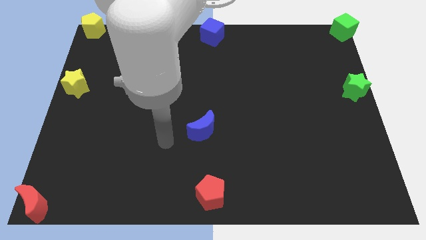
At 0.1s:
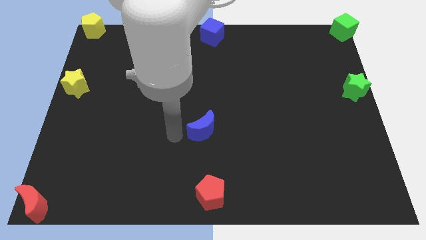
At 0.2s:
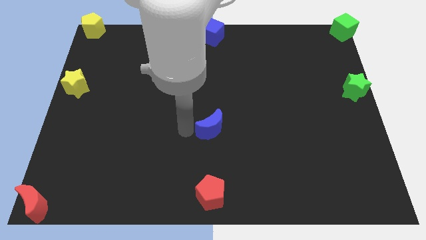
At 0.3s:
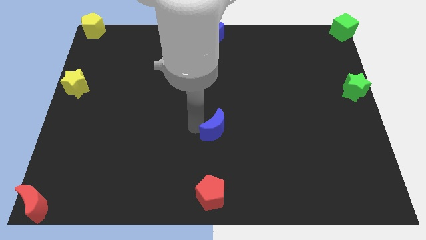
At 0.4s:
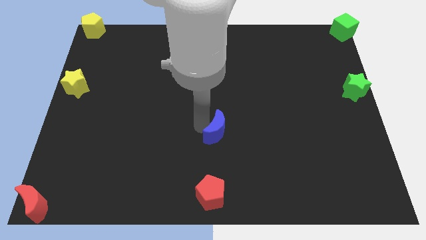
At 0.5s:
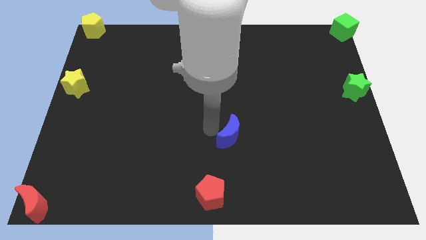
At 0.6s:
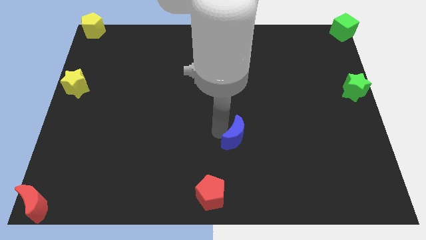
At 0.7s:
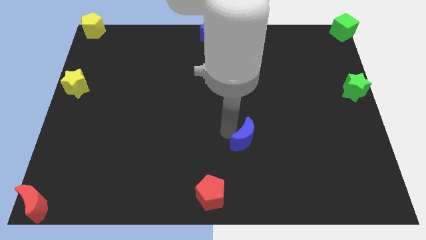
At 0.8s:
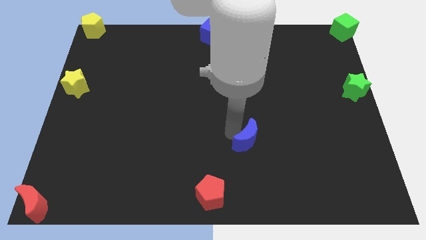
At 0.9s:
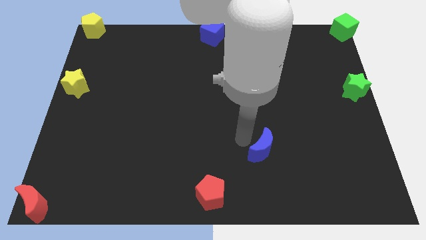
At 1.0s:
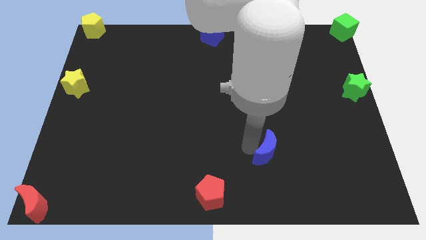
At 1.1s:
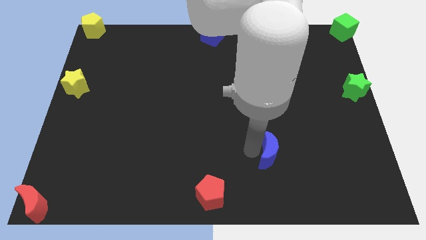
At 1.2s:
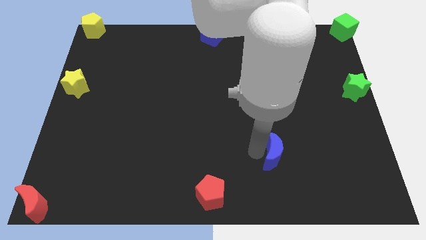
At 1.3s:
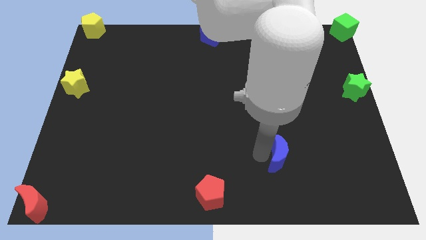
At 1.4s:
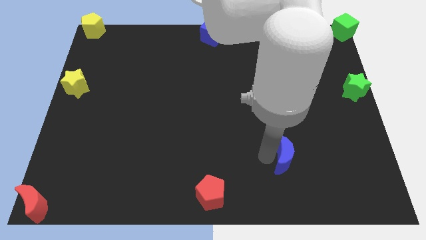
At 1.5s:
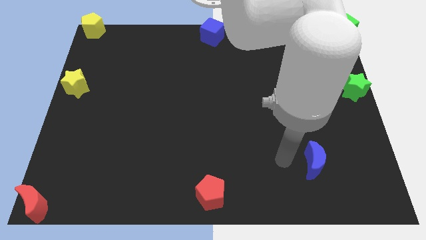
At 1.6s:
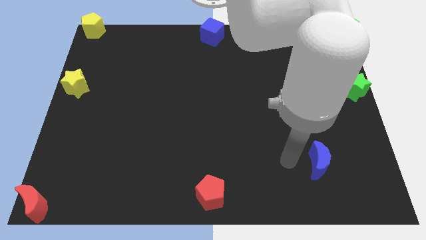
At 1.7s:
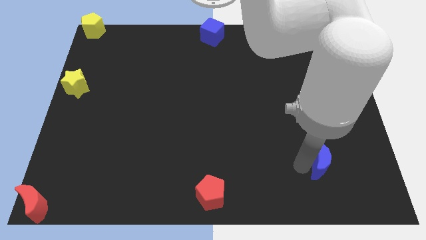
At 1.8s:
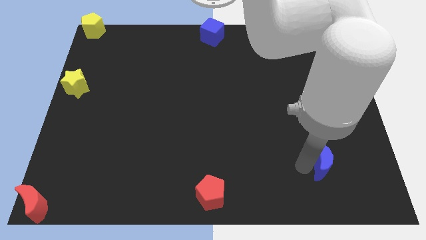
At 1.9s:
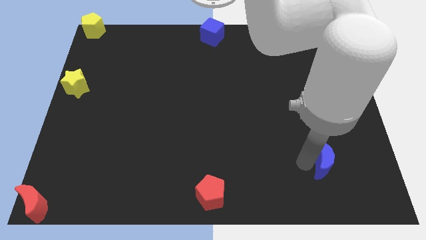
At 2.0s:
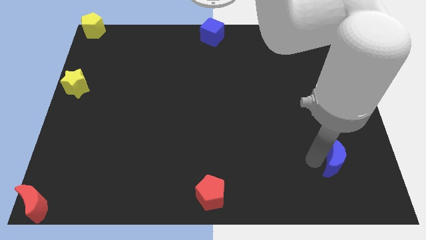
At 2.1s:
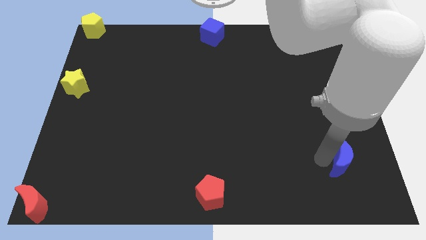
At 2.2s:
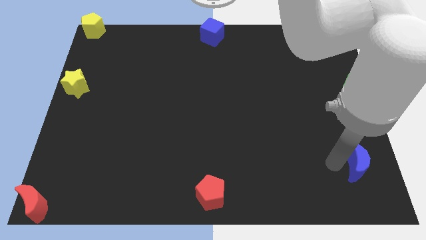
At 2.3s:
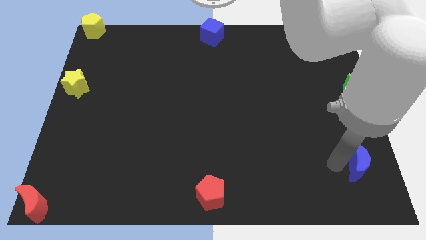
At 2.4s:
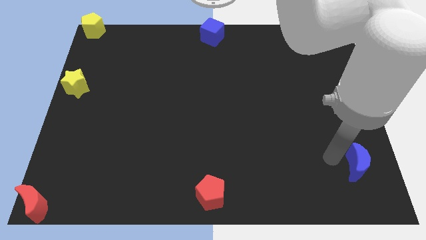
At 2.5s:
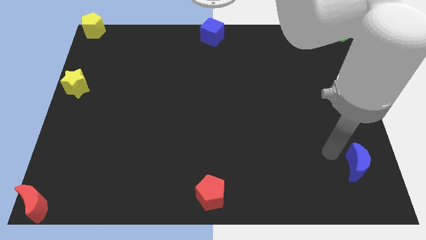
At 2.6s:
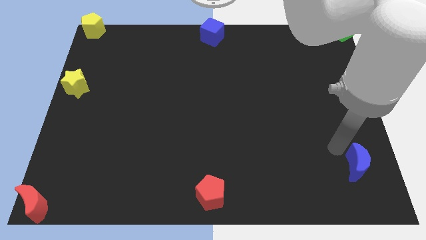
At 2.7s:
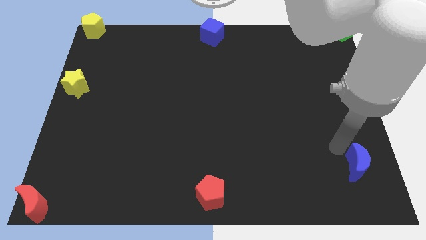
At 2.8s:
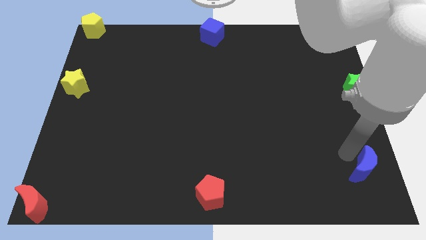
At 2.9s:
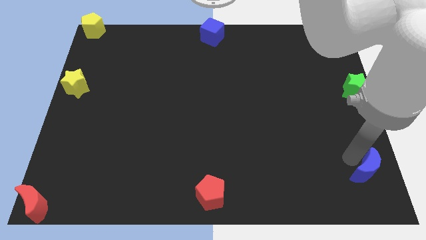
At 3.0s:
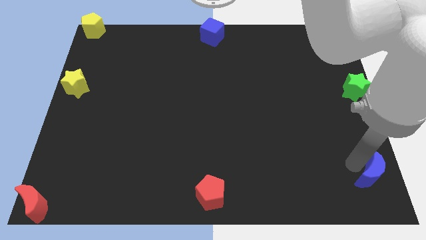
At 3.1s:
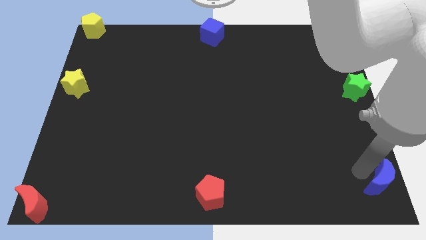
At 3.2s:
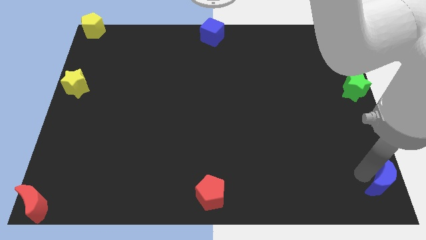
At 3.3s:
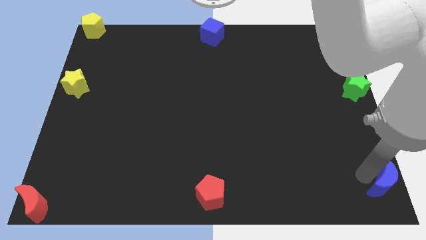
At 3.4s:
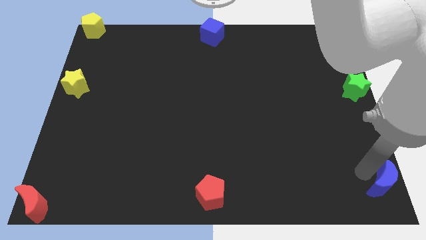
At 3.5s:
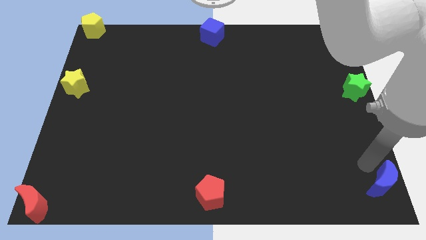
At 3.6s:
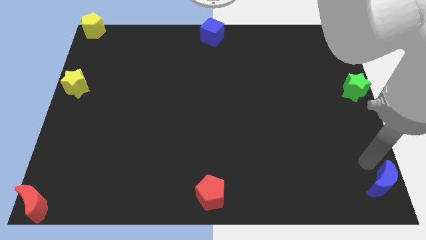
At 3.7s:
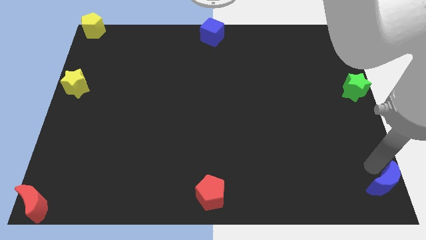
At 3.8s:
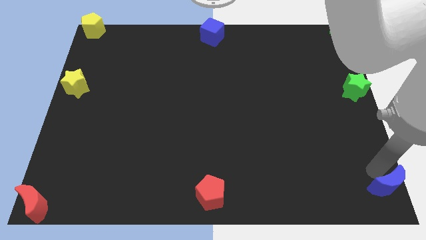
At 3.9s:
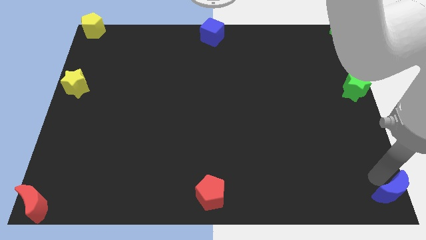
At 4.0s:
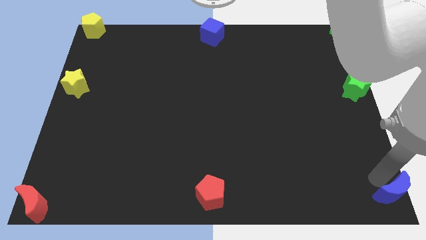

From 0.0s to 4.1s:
drag the blue moon to the bottom right corner of the board

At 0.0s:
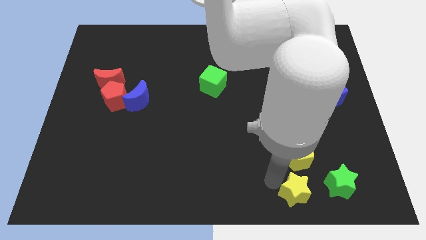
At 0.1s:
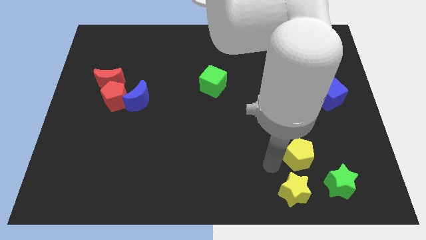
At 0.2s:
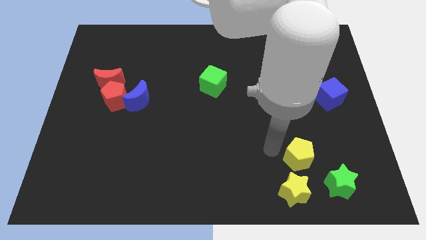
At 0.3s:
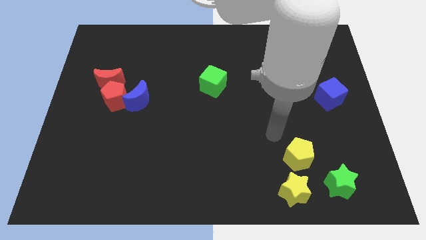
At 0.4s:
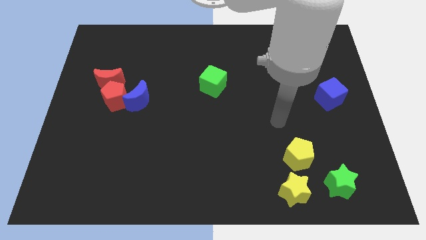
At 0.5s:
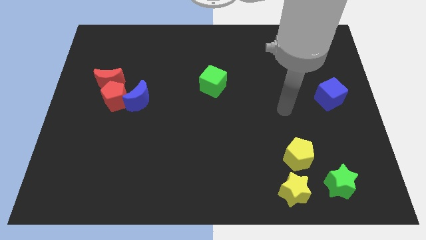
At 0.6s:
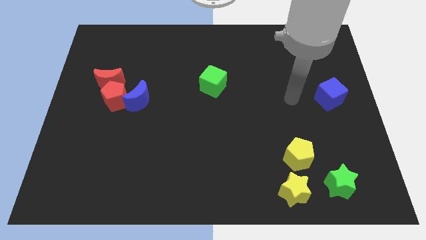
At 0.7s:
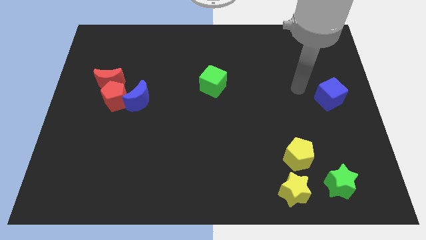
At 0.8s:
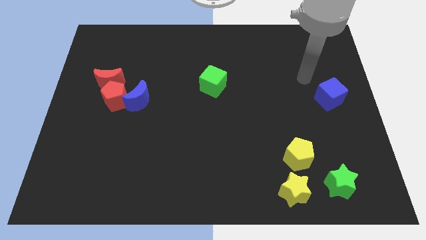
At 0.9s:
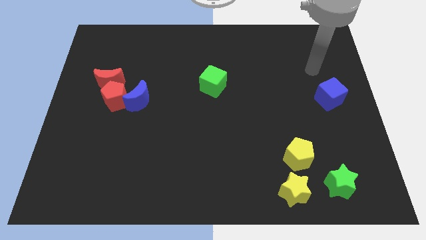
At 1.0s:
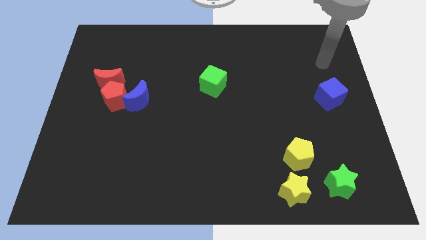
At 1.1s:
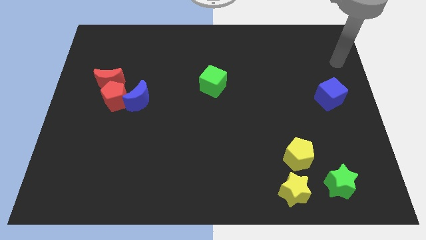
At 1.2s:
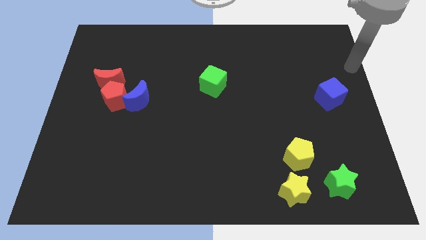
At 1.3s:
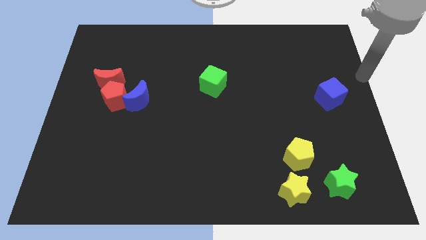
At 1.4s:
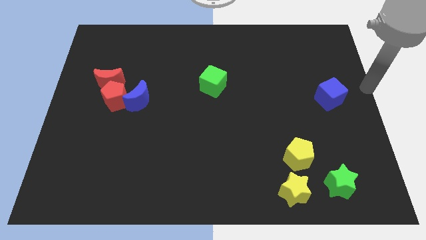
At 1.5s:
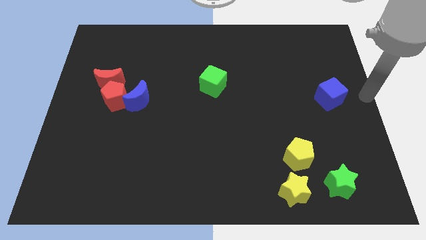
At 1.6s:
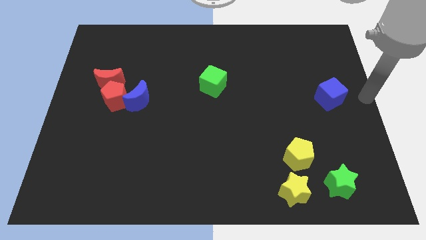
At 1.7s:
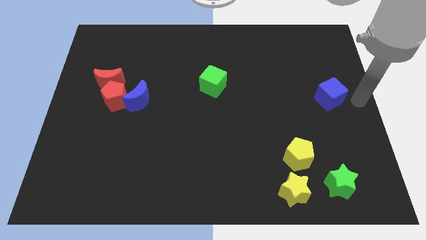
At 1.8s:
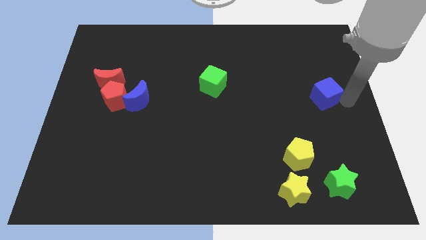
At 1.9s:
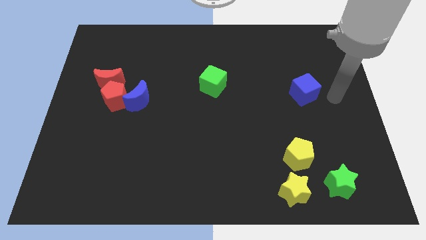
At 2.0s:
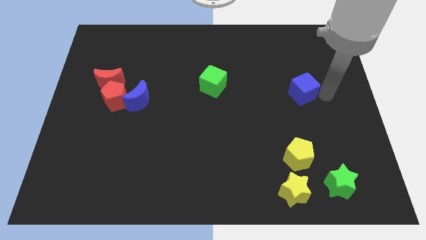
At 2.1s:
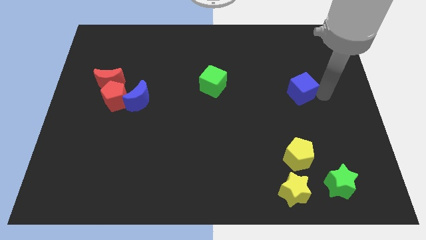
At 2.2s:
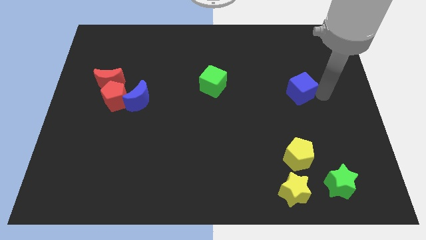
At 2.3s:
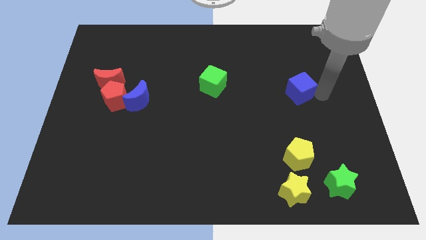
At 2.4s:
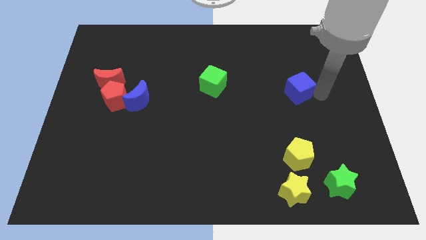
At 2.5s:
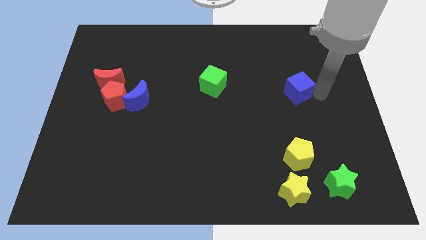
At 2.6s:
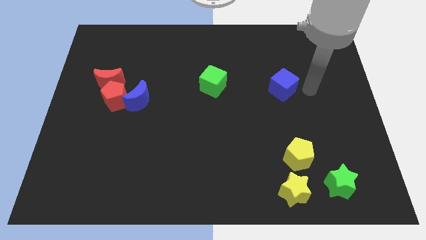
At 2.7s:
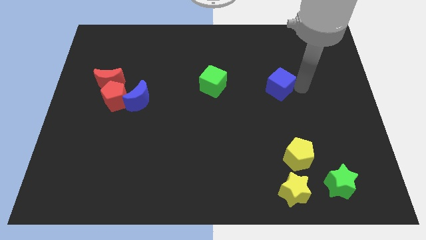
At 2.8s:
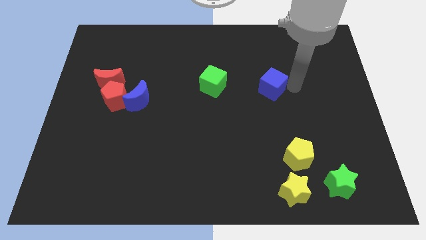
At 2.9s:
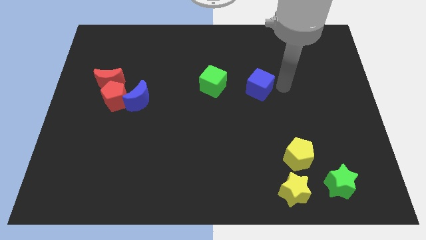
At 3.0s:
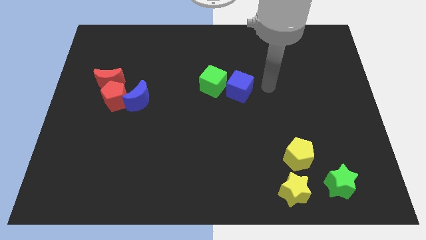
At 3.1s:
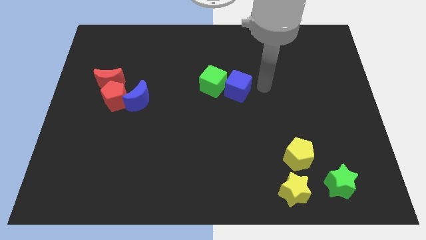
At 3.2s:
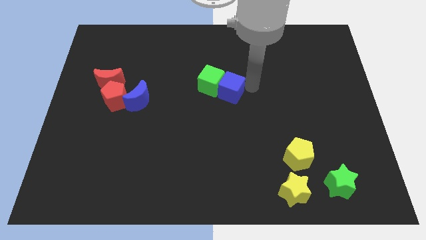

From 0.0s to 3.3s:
move the blue cube to the right side of the green cube

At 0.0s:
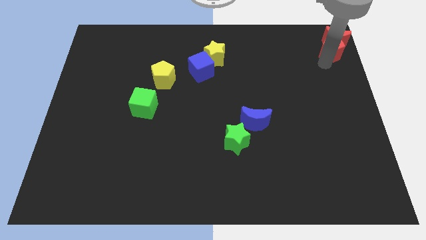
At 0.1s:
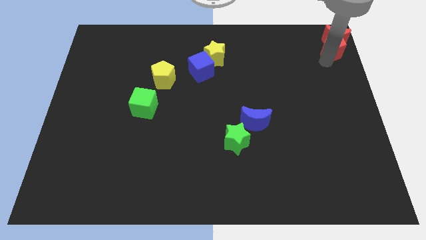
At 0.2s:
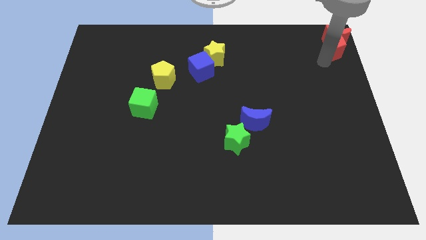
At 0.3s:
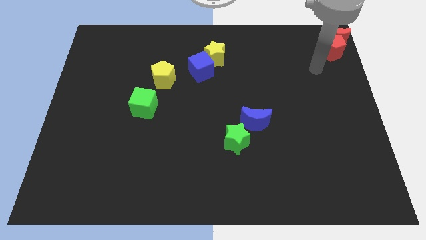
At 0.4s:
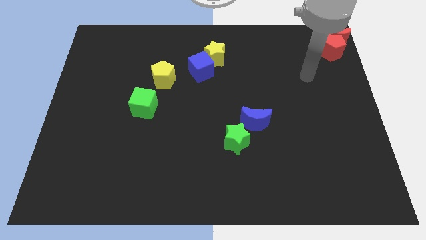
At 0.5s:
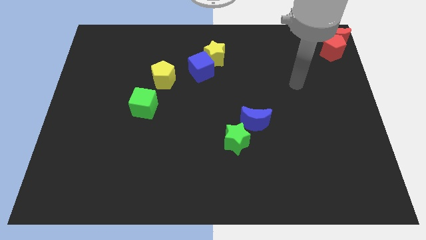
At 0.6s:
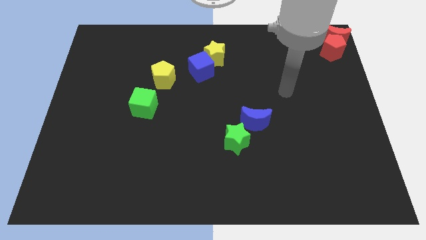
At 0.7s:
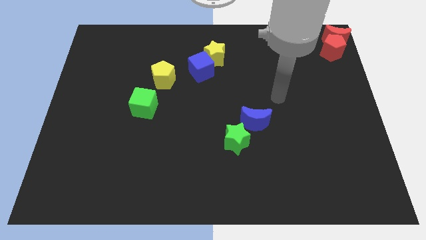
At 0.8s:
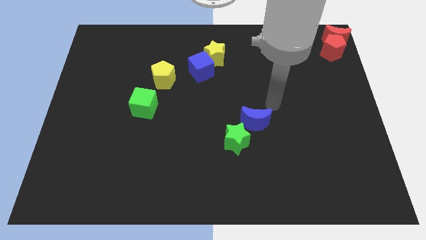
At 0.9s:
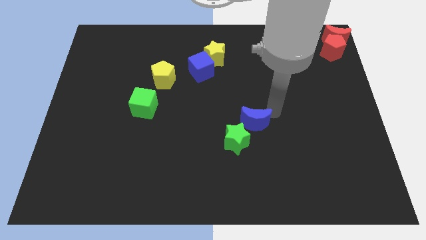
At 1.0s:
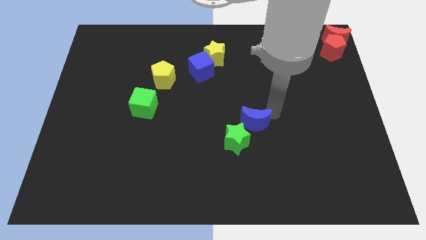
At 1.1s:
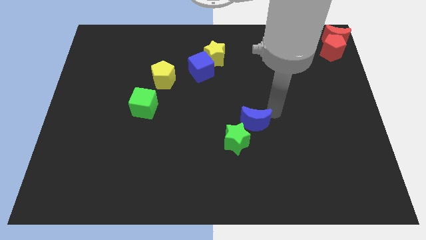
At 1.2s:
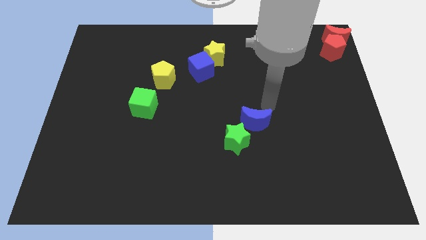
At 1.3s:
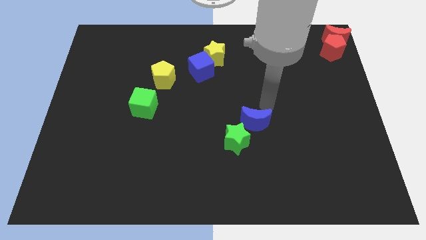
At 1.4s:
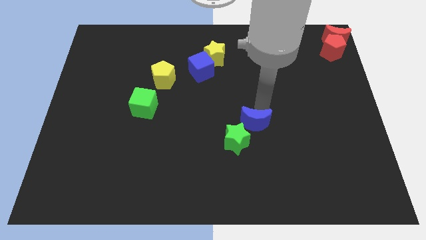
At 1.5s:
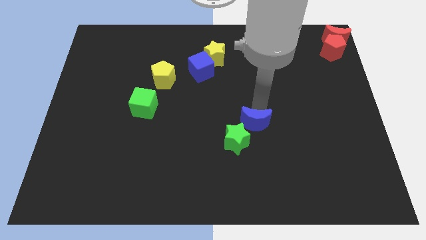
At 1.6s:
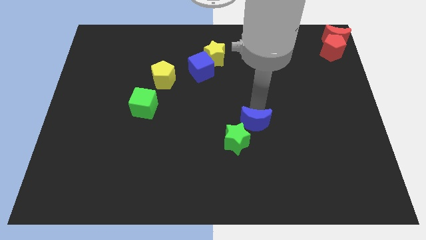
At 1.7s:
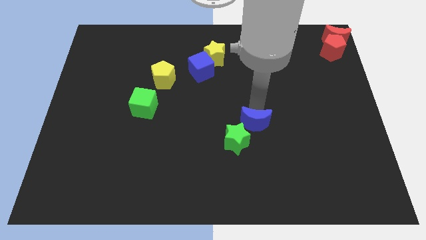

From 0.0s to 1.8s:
touch the blue moon with the arm
